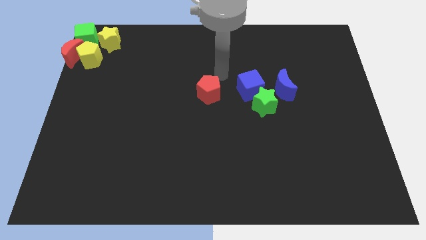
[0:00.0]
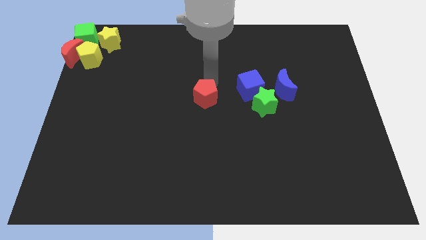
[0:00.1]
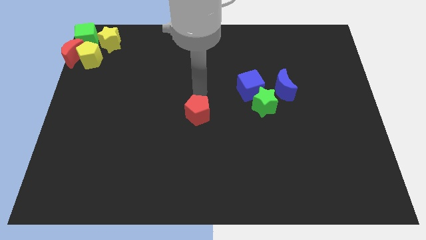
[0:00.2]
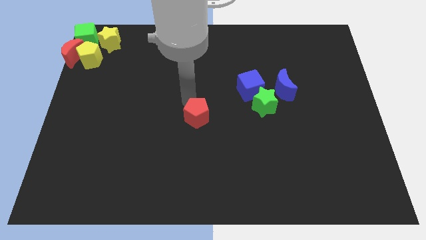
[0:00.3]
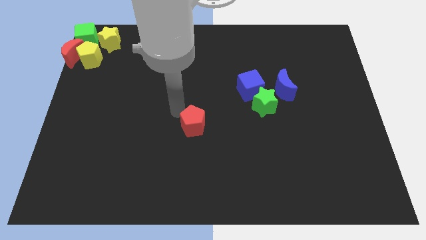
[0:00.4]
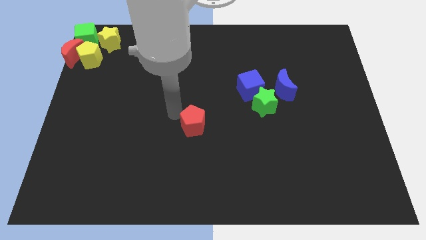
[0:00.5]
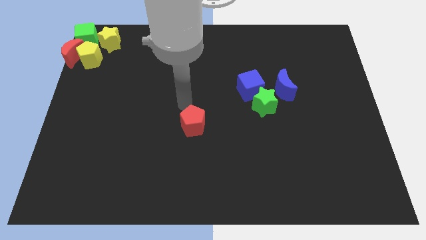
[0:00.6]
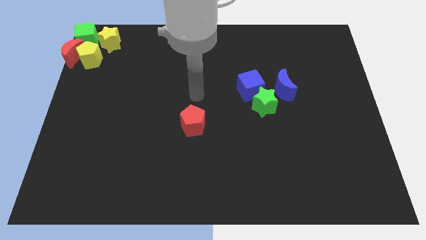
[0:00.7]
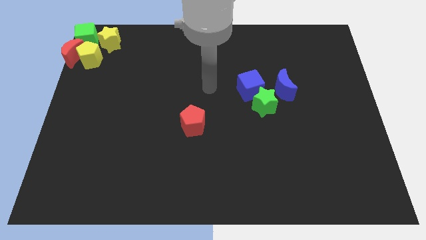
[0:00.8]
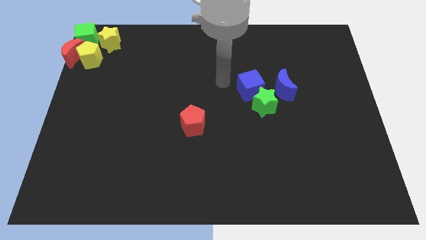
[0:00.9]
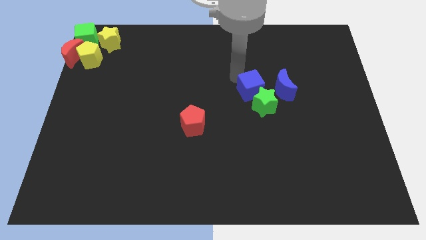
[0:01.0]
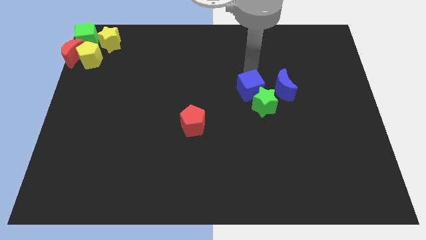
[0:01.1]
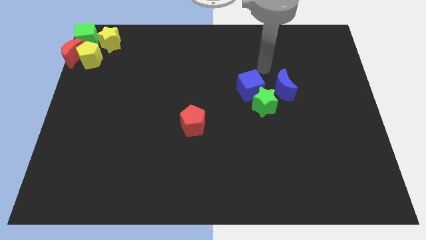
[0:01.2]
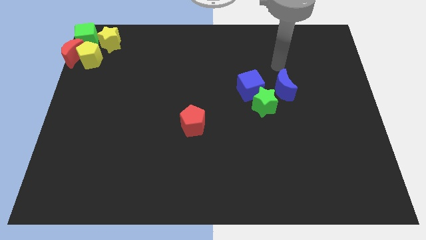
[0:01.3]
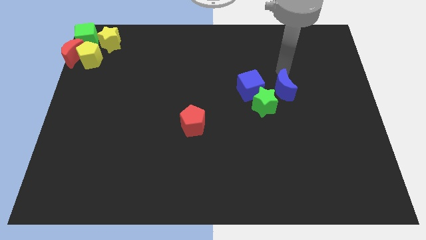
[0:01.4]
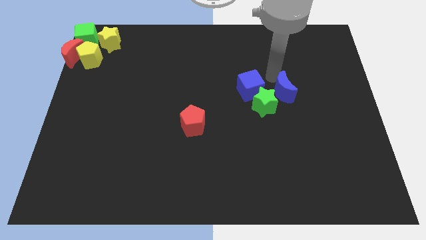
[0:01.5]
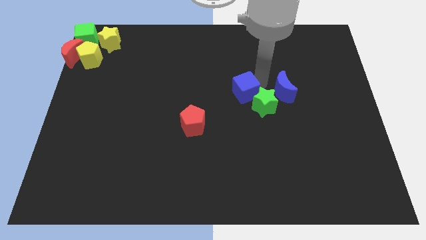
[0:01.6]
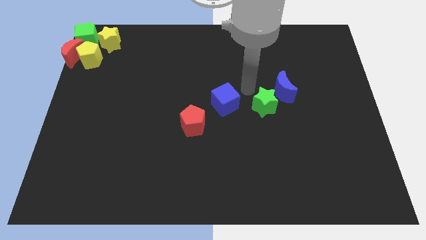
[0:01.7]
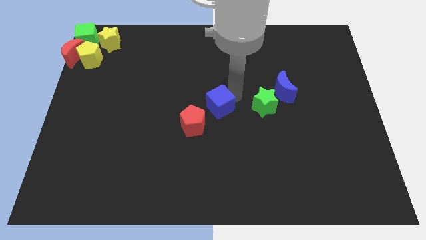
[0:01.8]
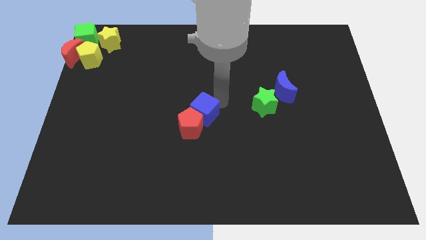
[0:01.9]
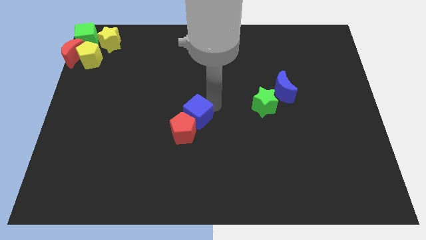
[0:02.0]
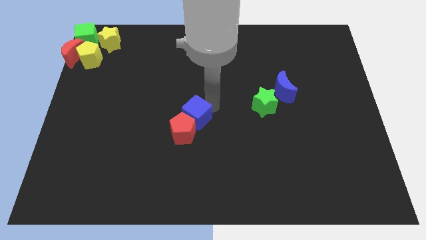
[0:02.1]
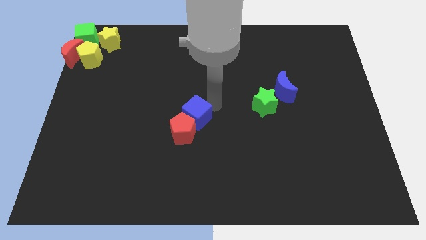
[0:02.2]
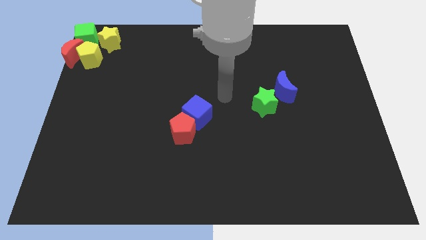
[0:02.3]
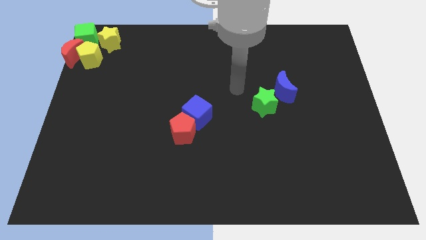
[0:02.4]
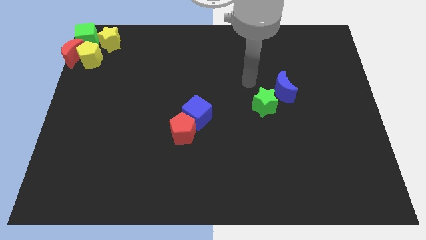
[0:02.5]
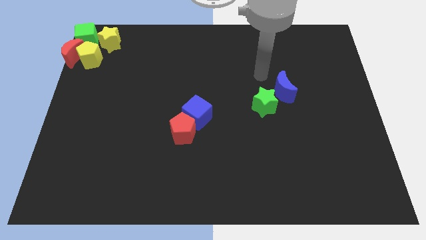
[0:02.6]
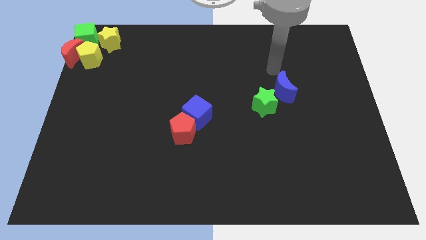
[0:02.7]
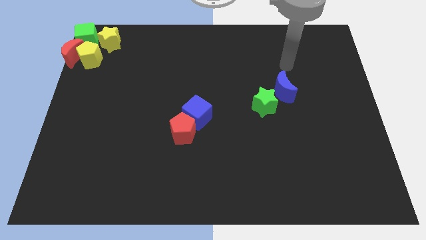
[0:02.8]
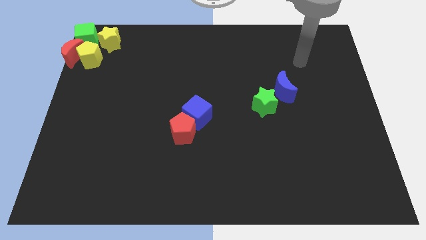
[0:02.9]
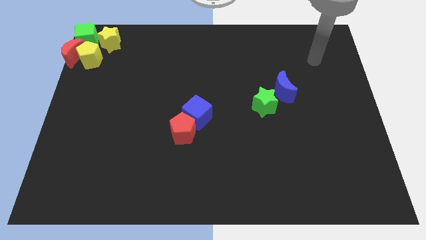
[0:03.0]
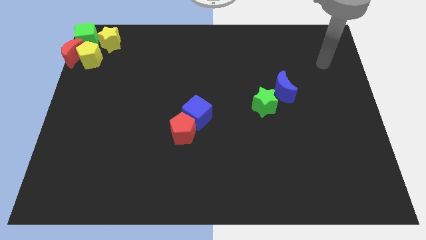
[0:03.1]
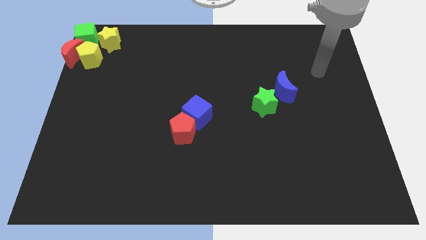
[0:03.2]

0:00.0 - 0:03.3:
push the blue cube into the red pentagon

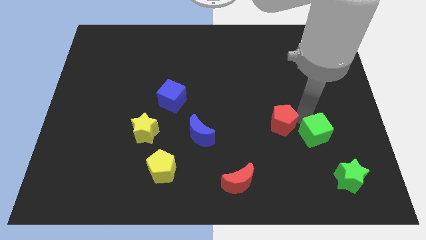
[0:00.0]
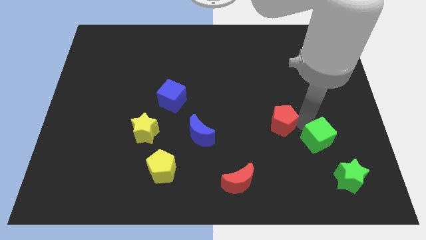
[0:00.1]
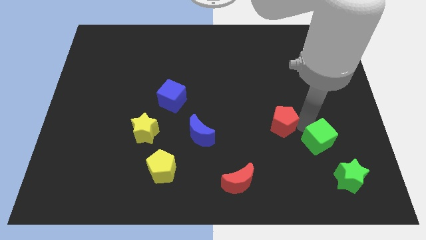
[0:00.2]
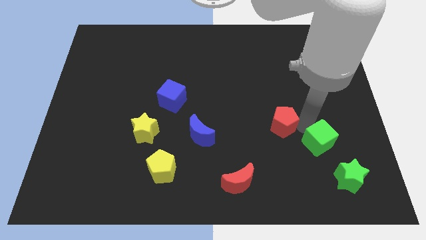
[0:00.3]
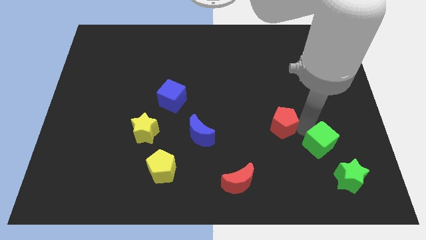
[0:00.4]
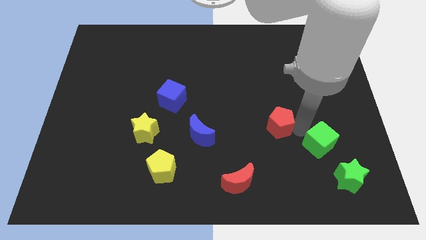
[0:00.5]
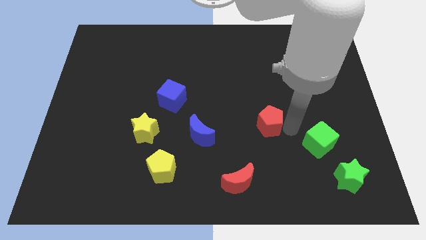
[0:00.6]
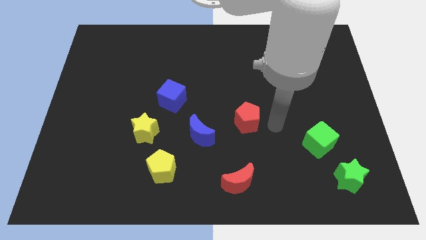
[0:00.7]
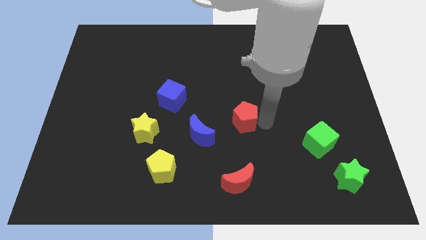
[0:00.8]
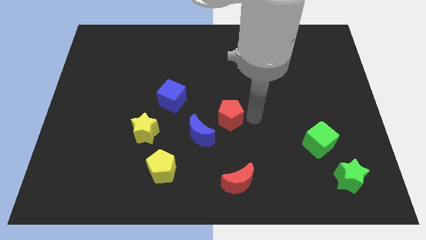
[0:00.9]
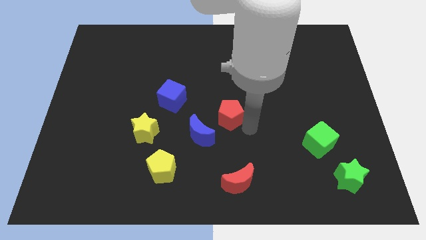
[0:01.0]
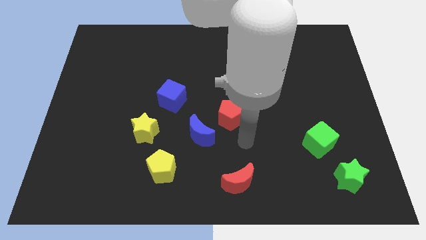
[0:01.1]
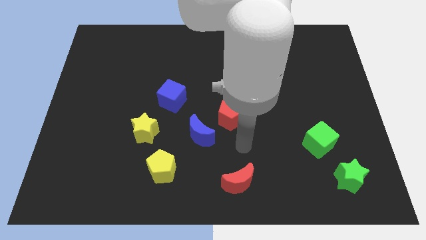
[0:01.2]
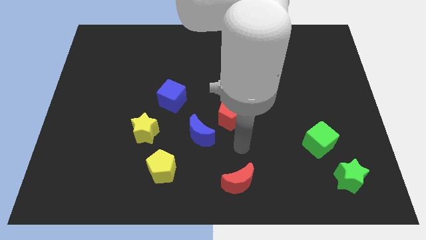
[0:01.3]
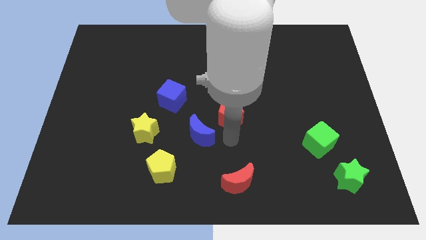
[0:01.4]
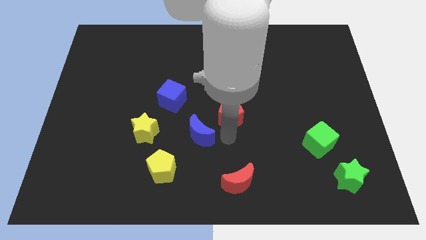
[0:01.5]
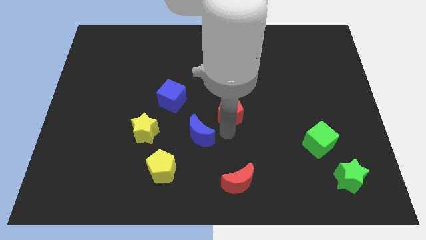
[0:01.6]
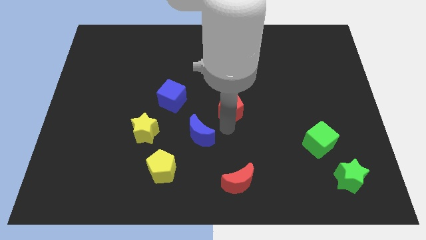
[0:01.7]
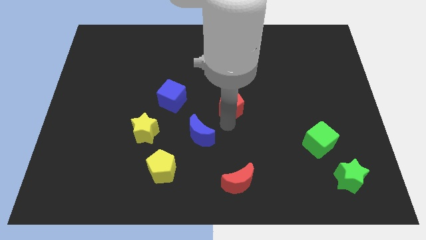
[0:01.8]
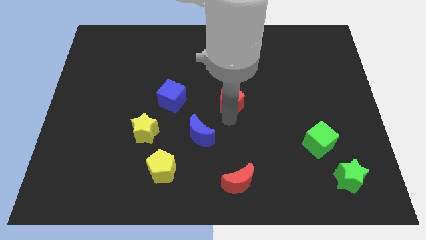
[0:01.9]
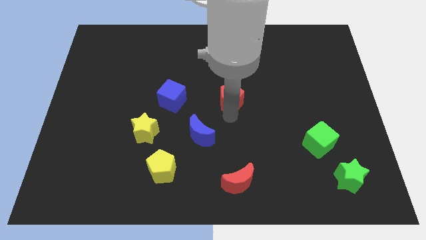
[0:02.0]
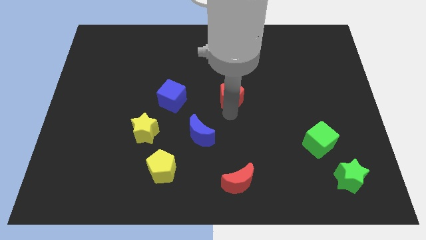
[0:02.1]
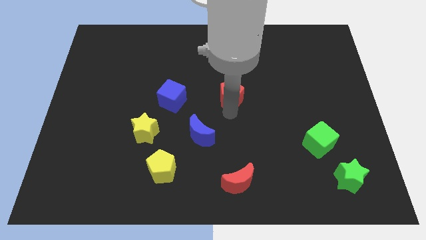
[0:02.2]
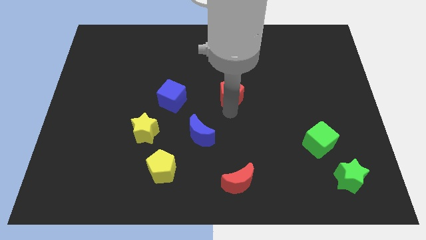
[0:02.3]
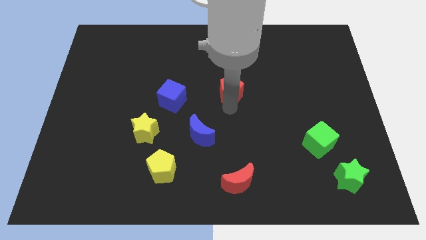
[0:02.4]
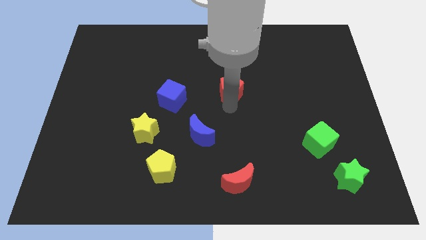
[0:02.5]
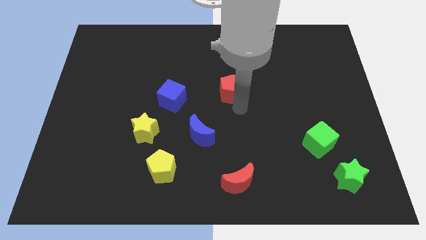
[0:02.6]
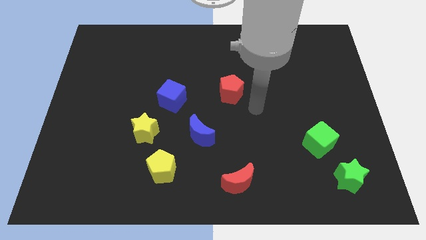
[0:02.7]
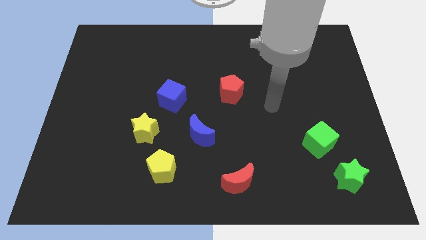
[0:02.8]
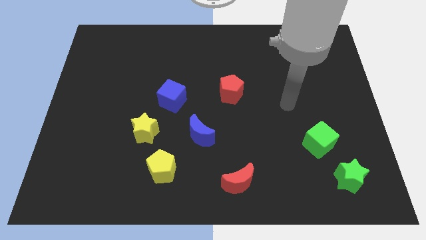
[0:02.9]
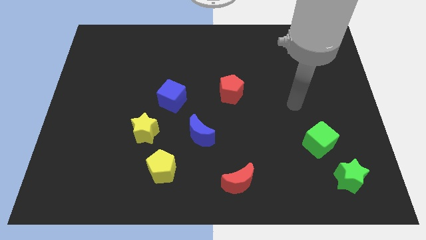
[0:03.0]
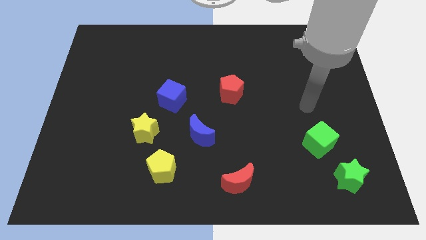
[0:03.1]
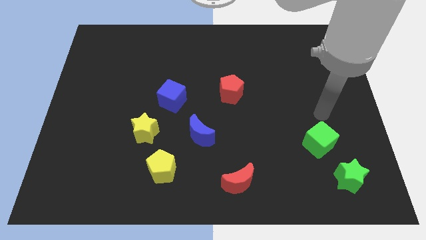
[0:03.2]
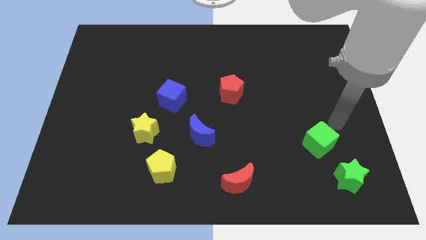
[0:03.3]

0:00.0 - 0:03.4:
slide red pentagon to center

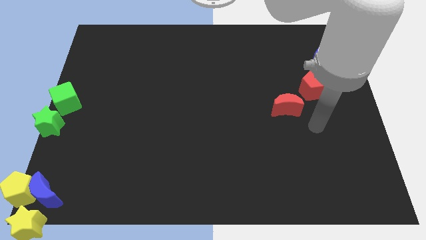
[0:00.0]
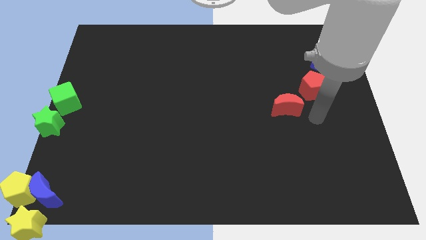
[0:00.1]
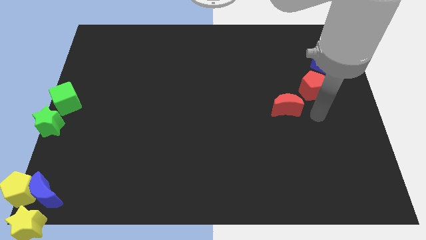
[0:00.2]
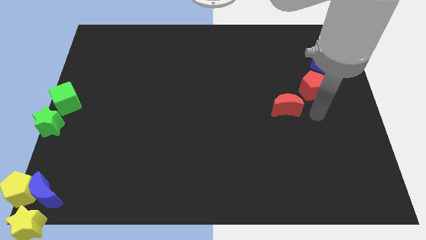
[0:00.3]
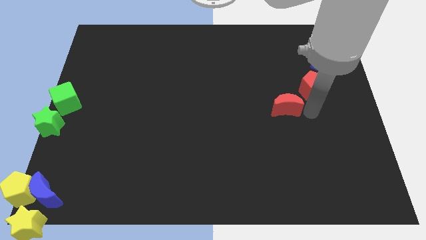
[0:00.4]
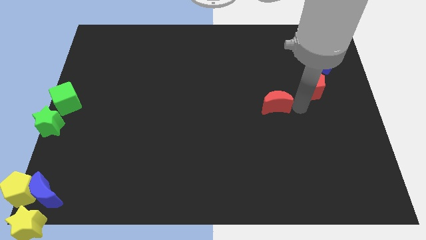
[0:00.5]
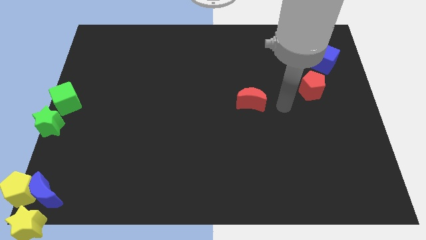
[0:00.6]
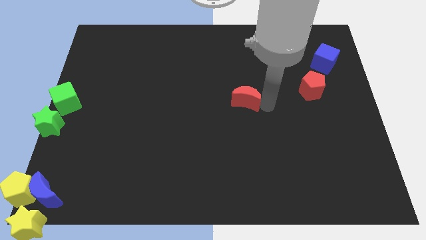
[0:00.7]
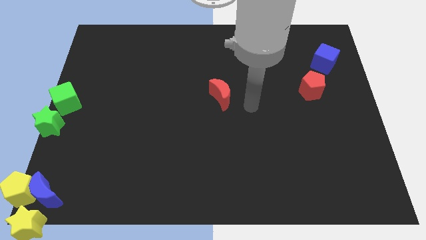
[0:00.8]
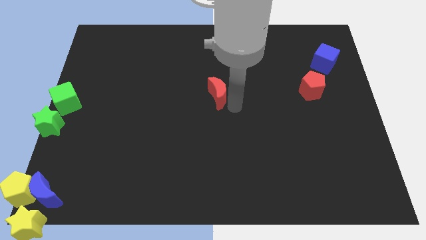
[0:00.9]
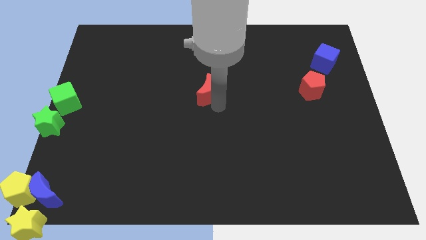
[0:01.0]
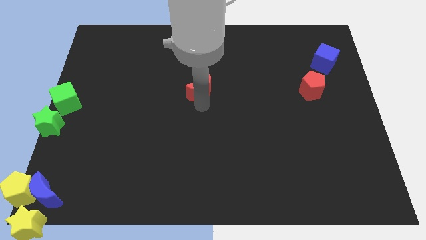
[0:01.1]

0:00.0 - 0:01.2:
move the red crescent towards the left of the board

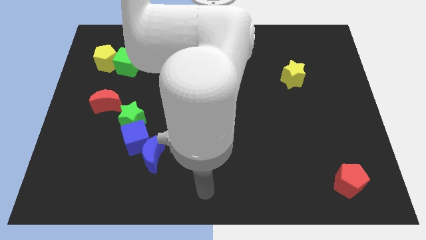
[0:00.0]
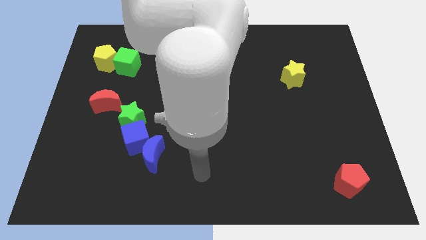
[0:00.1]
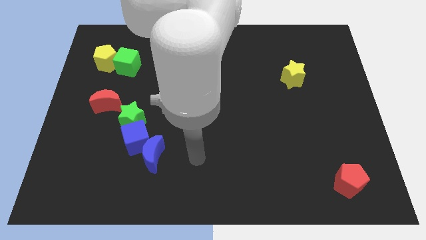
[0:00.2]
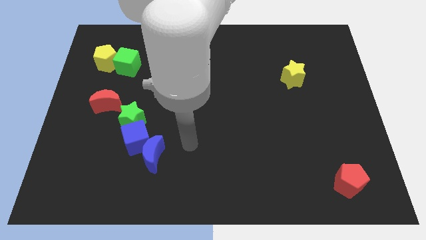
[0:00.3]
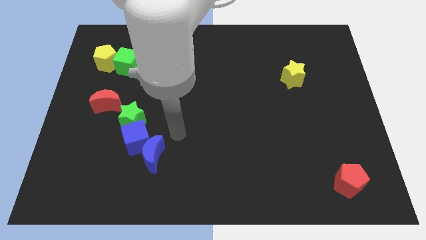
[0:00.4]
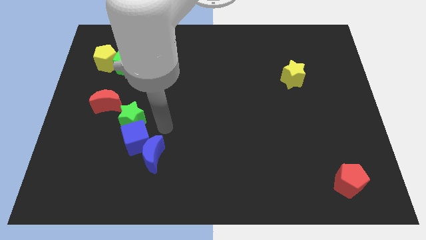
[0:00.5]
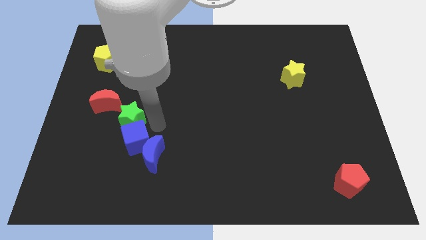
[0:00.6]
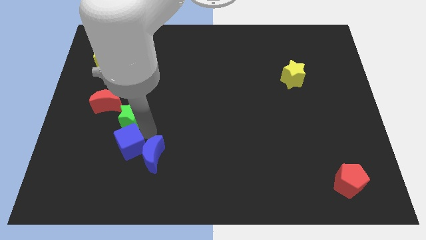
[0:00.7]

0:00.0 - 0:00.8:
push your arm at the right side of the blue cube

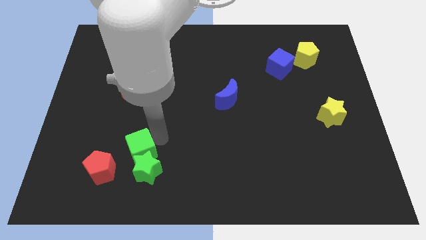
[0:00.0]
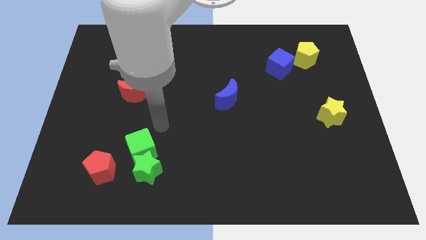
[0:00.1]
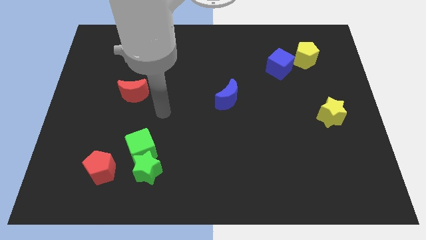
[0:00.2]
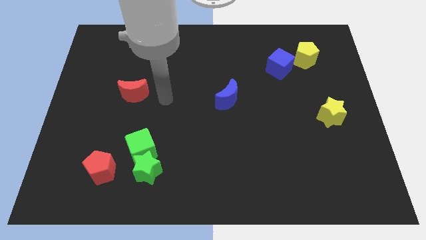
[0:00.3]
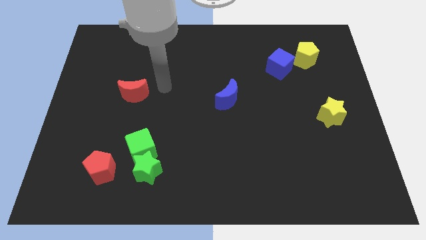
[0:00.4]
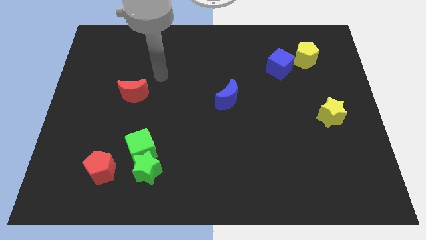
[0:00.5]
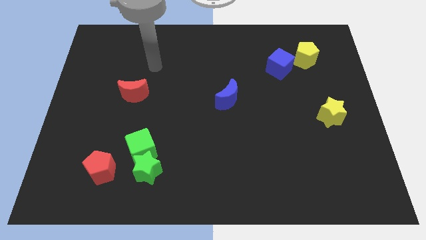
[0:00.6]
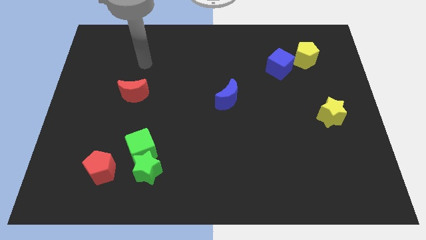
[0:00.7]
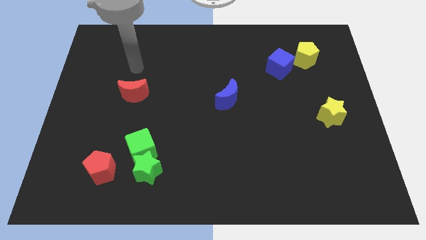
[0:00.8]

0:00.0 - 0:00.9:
place your hand above the red crescent
